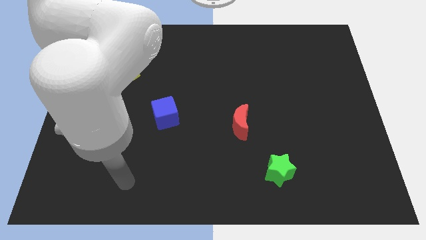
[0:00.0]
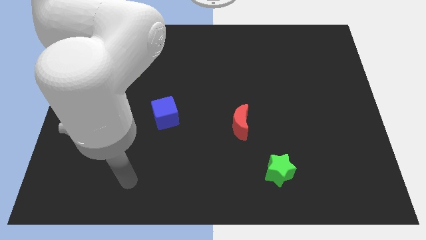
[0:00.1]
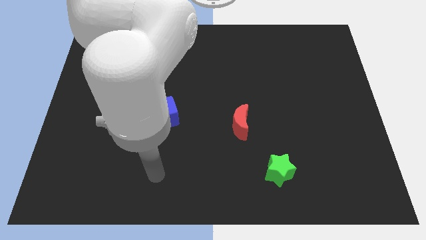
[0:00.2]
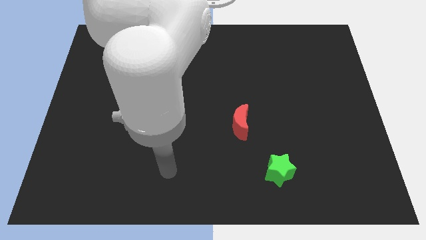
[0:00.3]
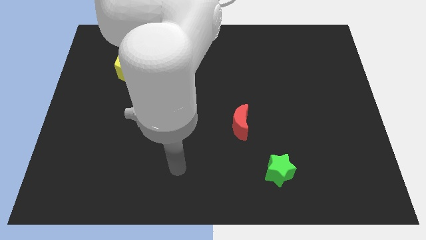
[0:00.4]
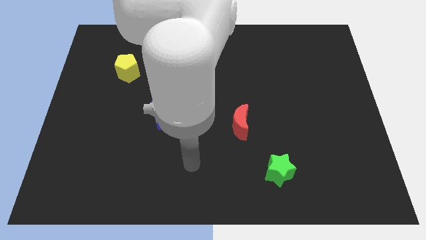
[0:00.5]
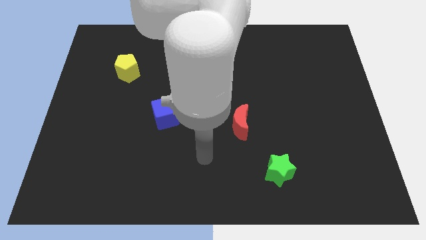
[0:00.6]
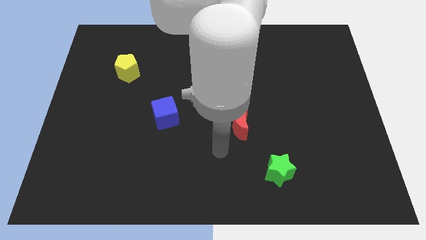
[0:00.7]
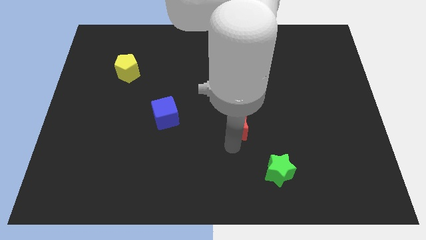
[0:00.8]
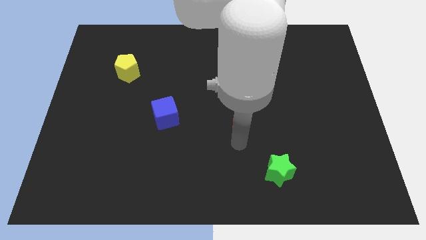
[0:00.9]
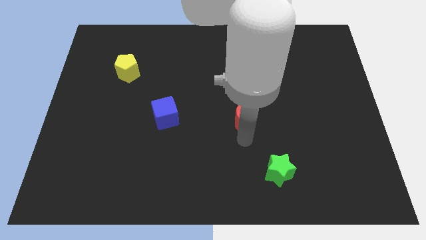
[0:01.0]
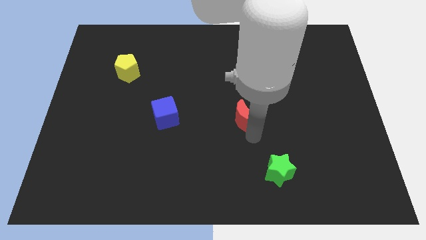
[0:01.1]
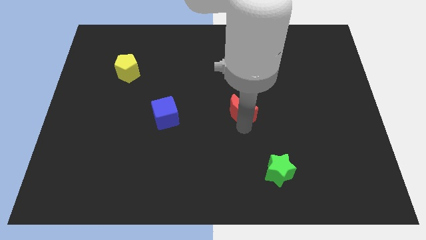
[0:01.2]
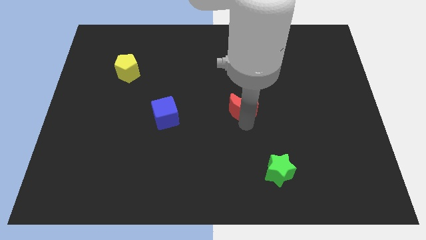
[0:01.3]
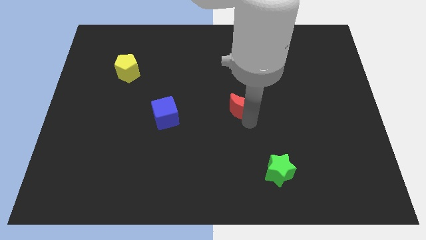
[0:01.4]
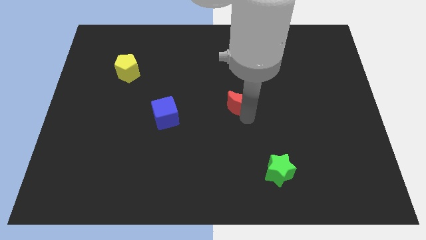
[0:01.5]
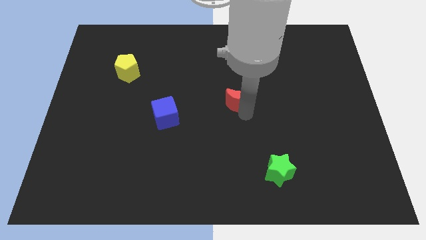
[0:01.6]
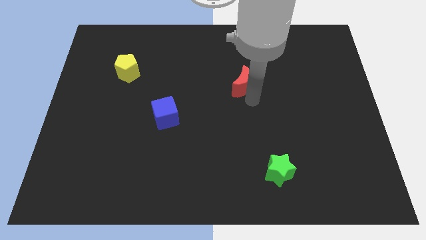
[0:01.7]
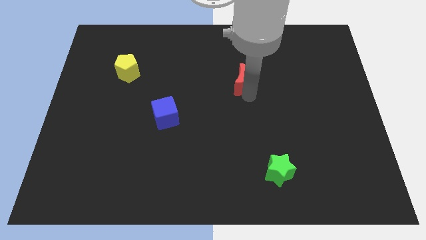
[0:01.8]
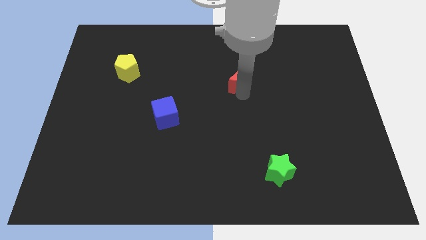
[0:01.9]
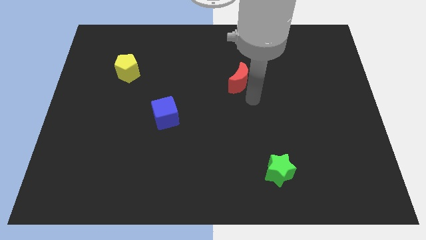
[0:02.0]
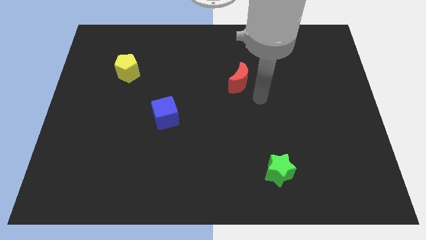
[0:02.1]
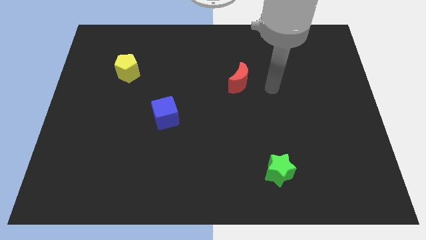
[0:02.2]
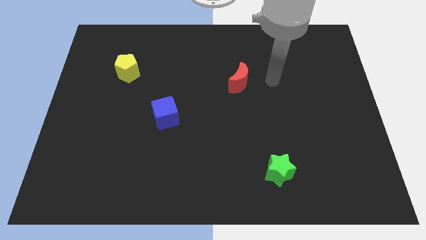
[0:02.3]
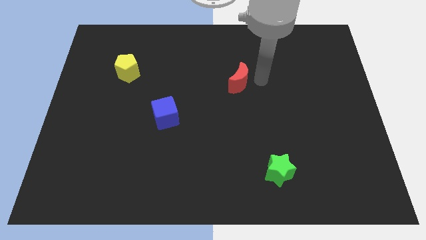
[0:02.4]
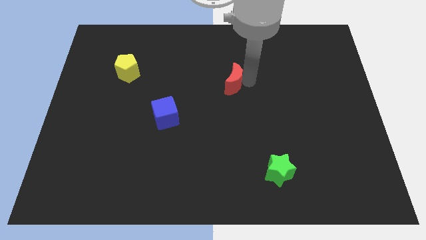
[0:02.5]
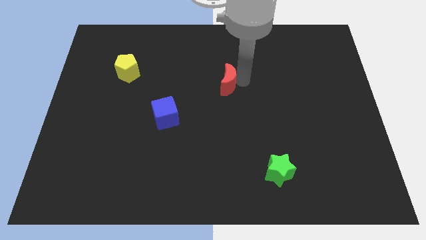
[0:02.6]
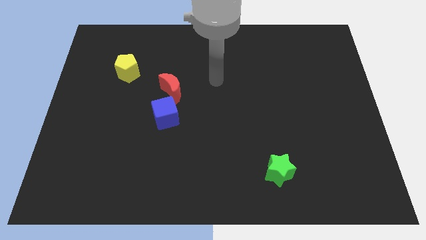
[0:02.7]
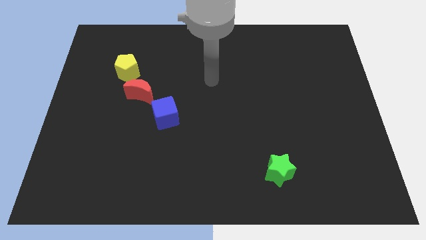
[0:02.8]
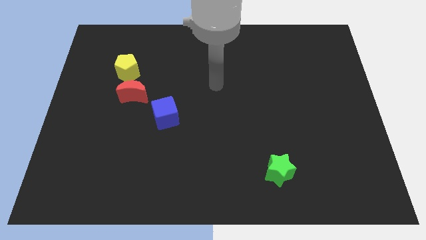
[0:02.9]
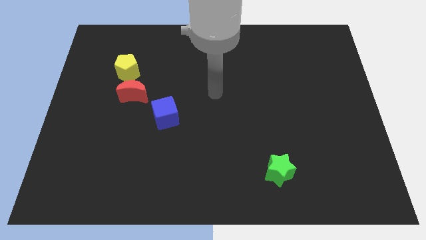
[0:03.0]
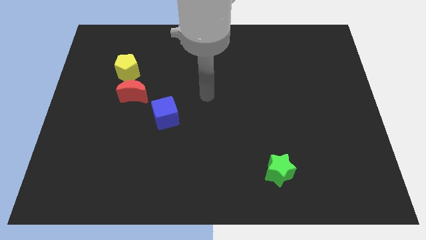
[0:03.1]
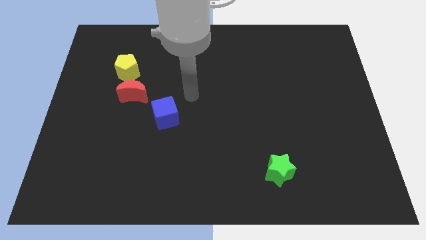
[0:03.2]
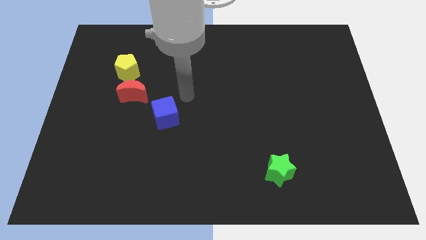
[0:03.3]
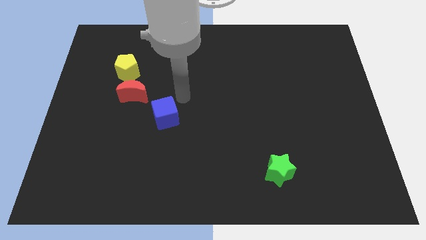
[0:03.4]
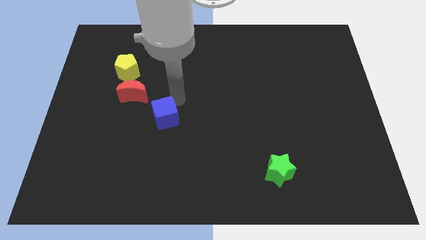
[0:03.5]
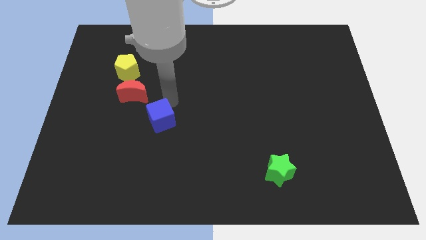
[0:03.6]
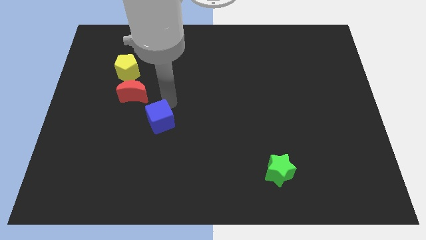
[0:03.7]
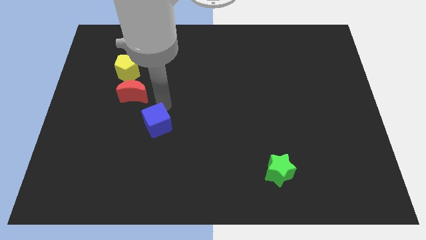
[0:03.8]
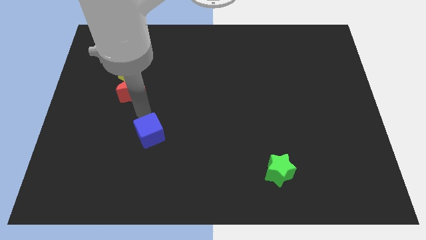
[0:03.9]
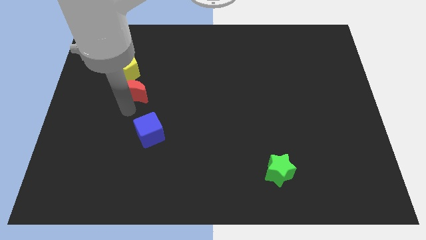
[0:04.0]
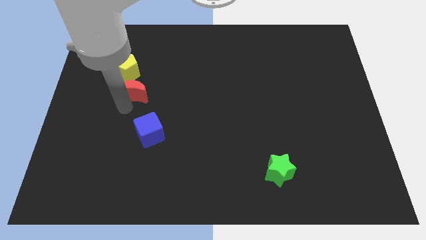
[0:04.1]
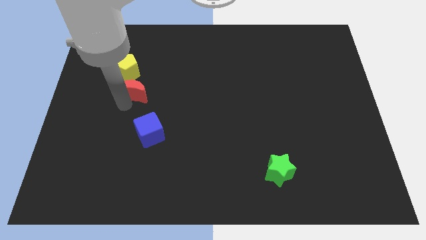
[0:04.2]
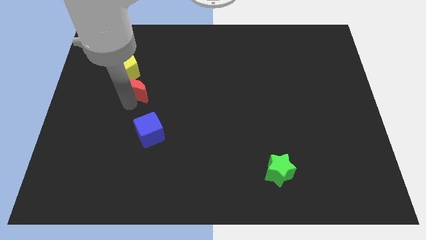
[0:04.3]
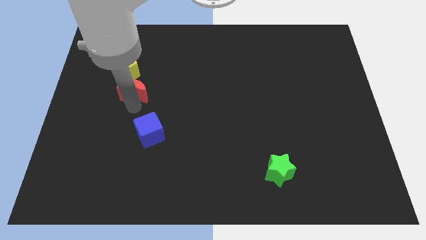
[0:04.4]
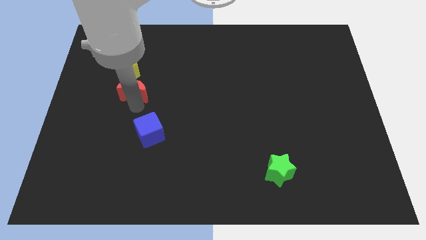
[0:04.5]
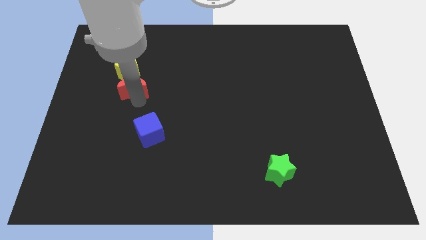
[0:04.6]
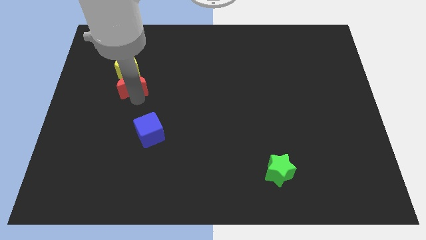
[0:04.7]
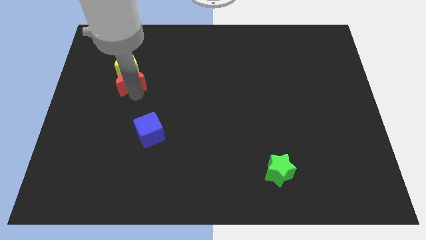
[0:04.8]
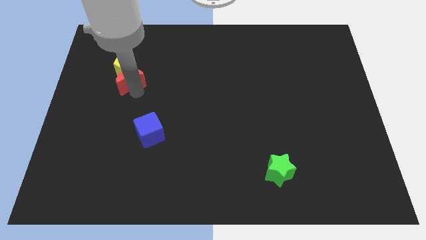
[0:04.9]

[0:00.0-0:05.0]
push the red block towards the pentagon

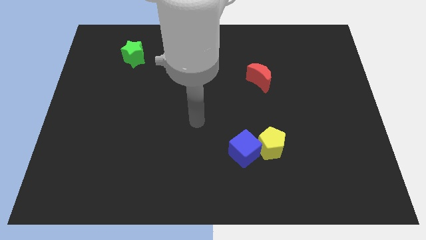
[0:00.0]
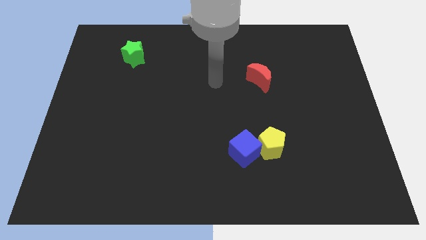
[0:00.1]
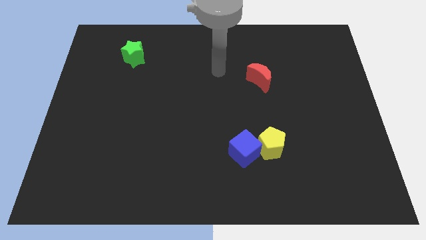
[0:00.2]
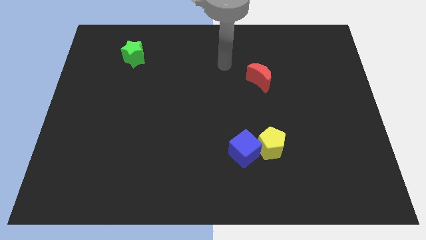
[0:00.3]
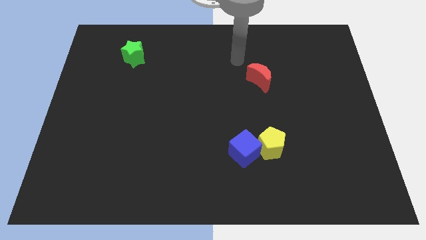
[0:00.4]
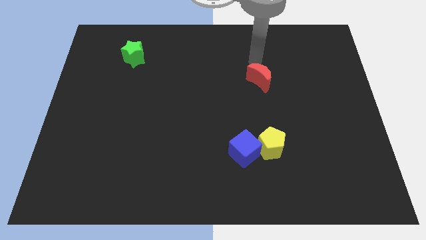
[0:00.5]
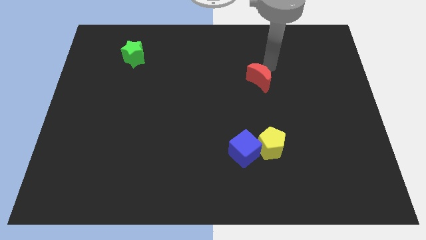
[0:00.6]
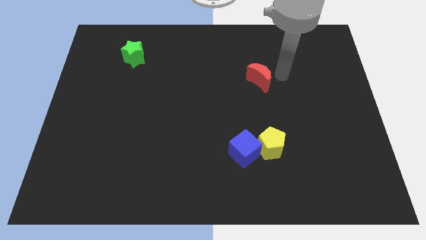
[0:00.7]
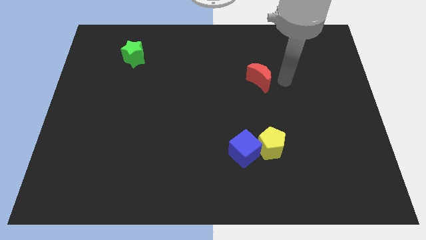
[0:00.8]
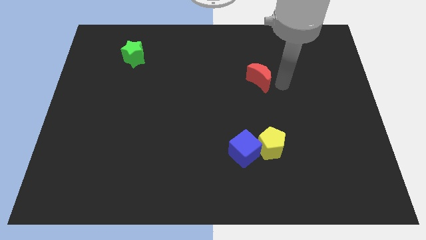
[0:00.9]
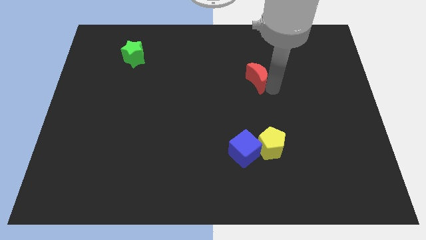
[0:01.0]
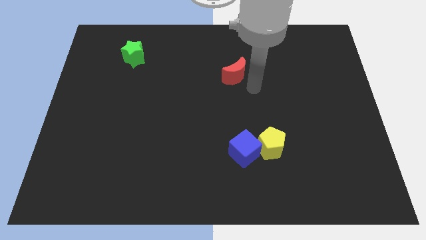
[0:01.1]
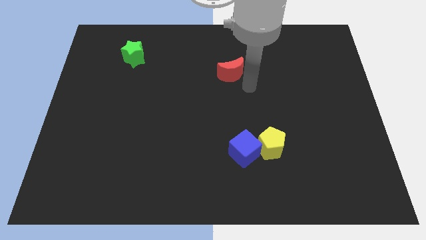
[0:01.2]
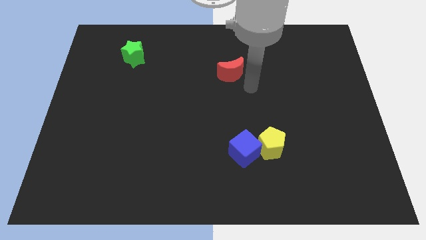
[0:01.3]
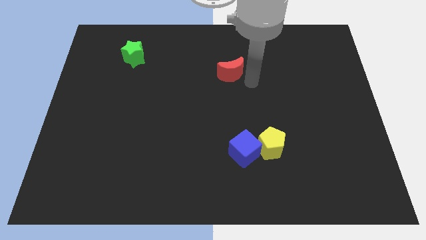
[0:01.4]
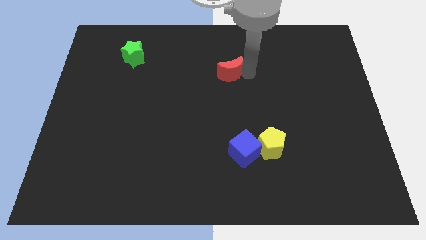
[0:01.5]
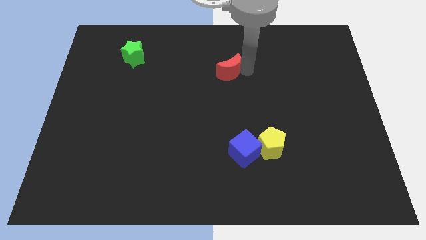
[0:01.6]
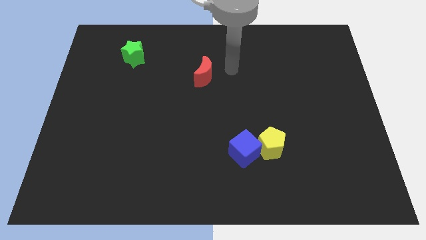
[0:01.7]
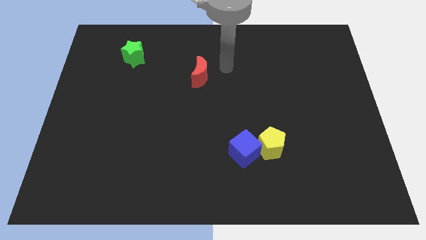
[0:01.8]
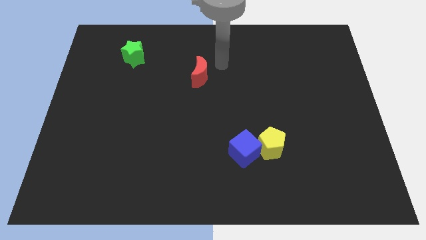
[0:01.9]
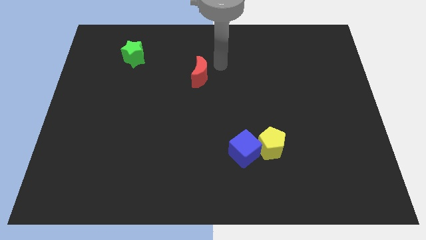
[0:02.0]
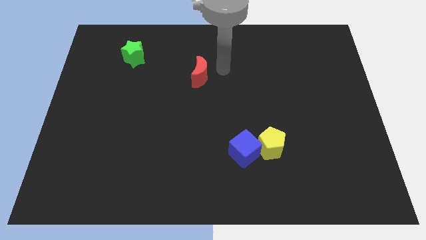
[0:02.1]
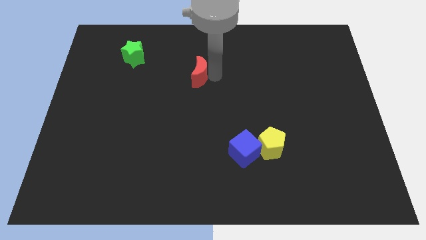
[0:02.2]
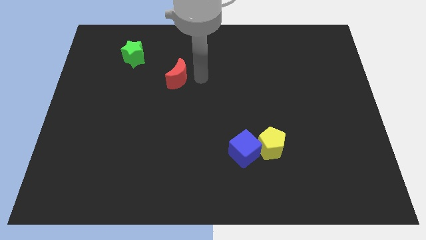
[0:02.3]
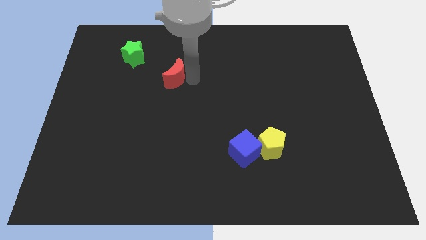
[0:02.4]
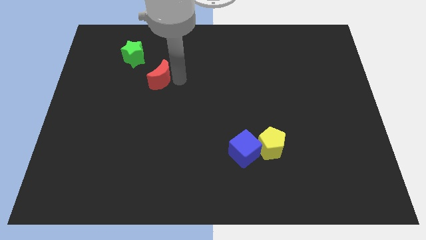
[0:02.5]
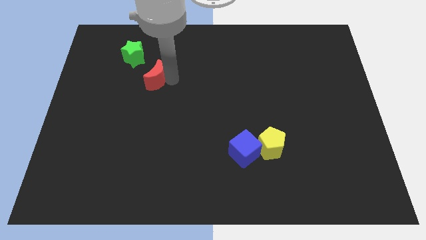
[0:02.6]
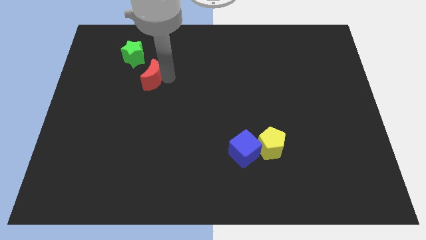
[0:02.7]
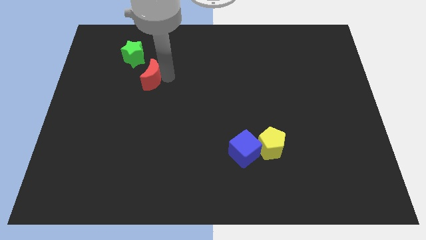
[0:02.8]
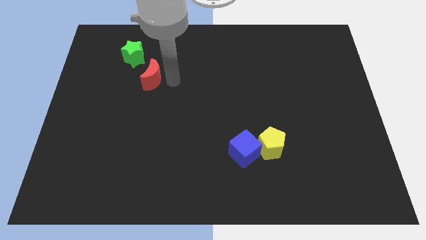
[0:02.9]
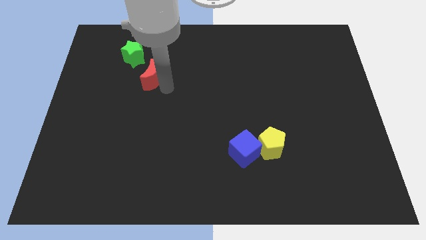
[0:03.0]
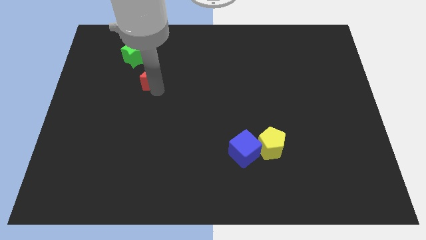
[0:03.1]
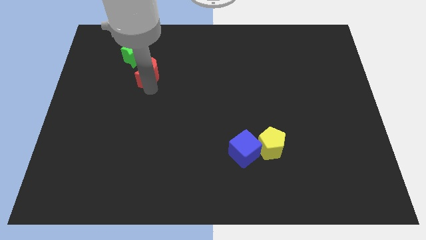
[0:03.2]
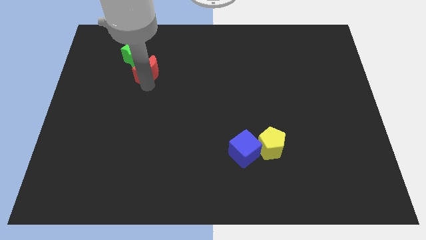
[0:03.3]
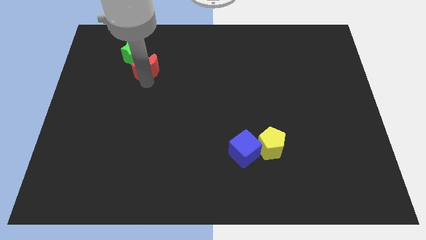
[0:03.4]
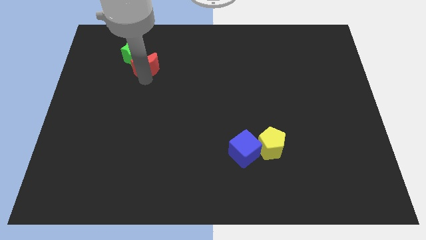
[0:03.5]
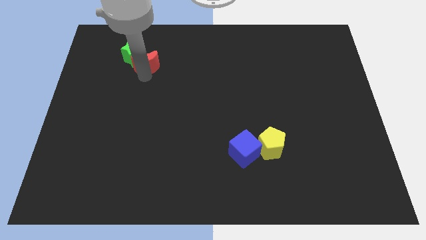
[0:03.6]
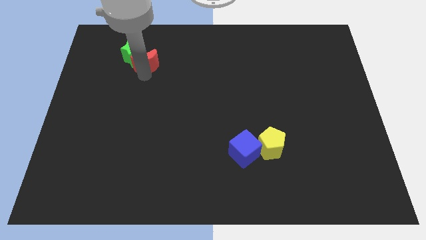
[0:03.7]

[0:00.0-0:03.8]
slide the red moon to the green star
